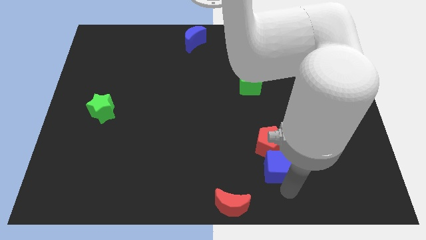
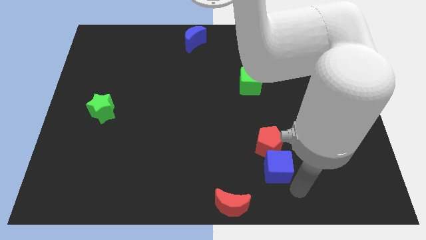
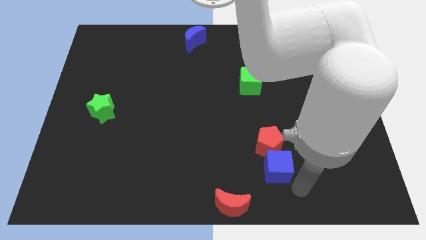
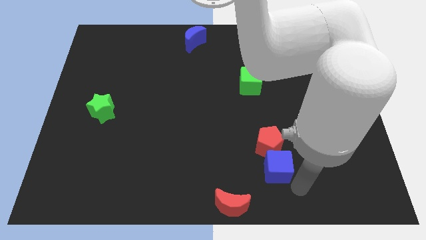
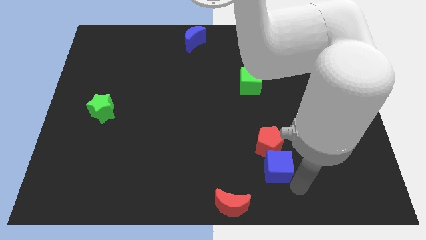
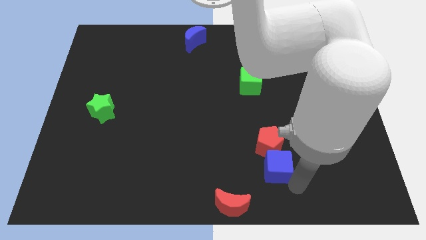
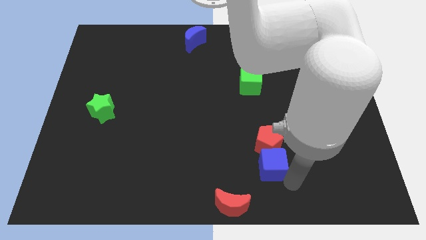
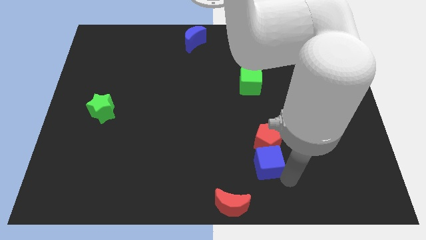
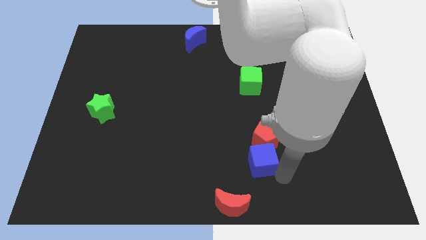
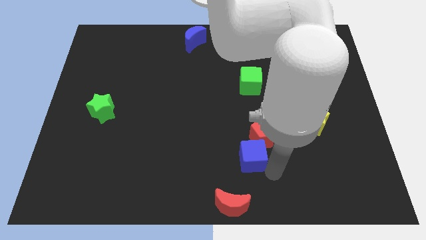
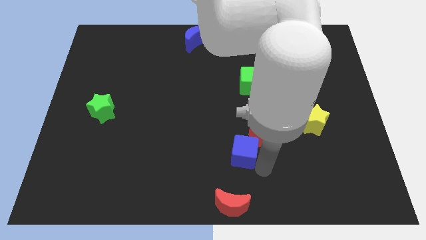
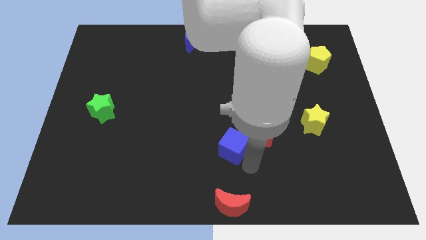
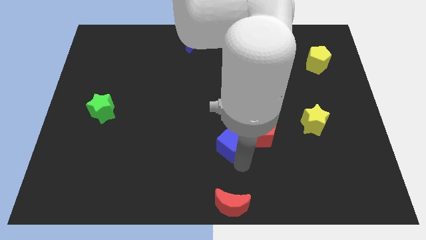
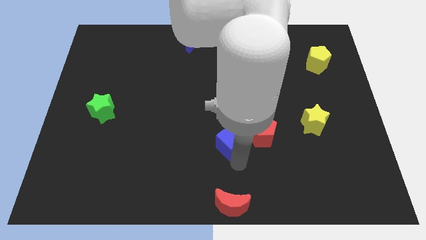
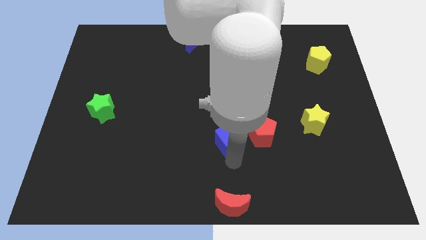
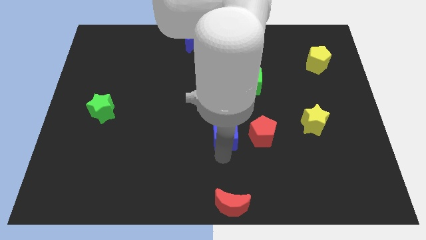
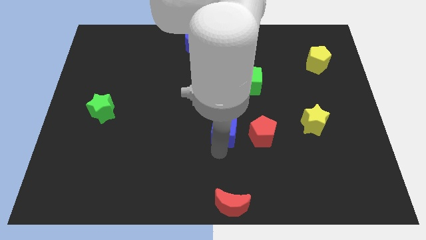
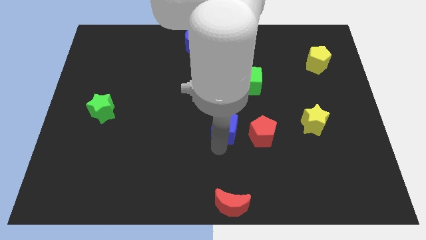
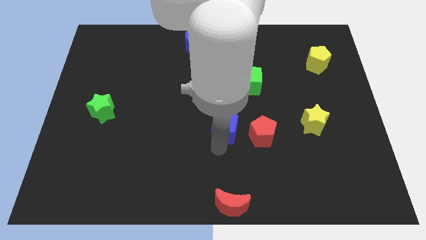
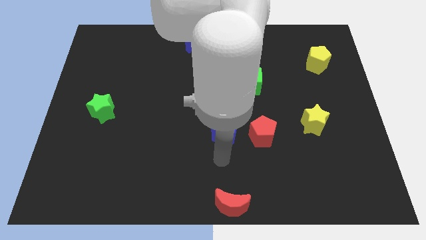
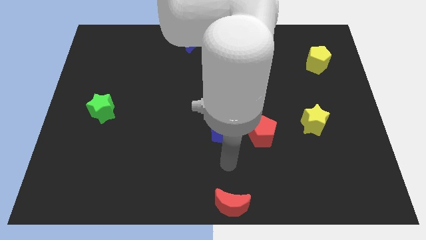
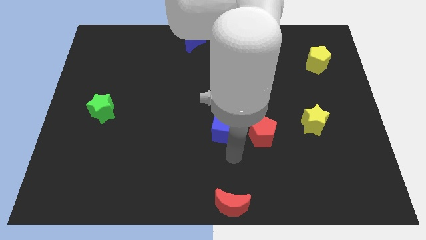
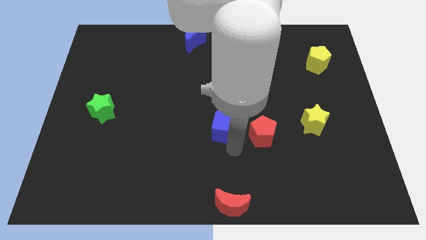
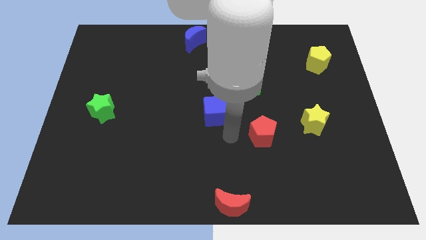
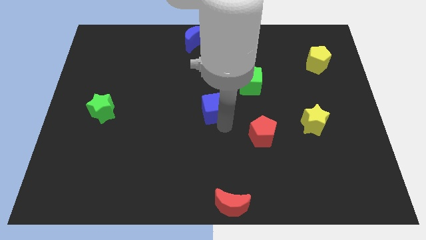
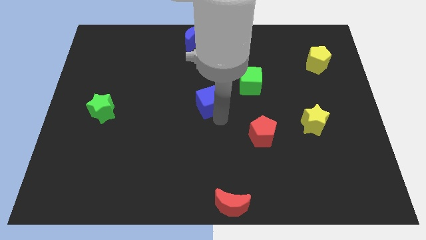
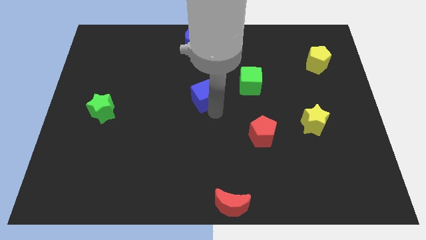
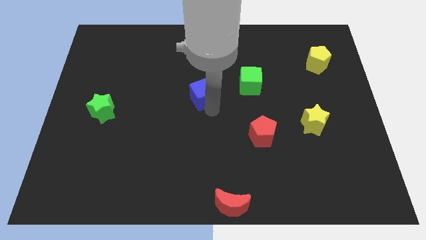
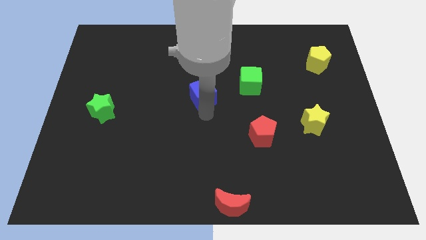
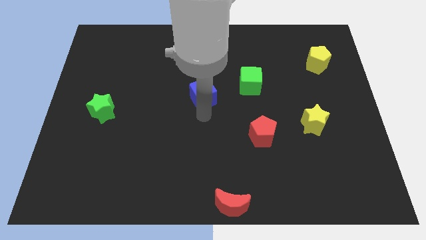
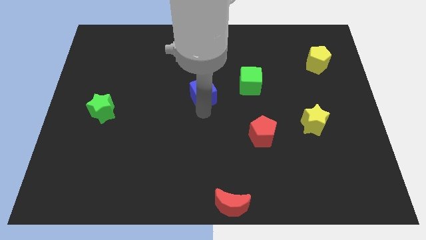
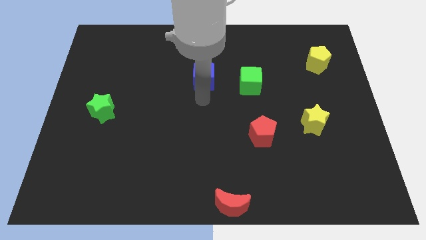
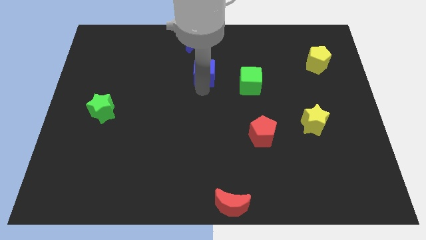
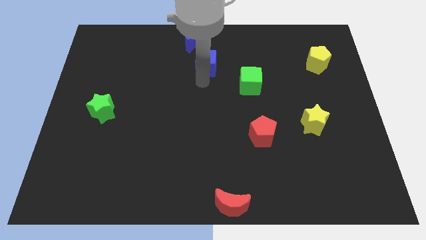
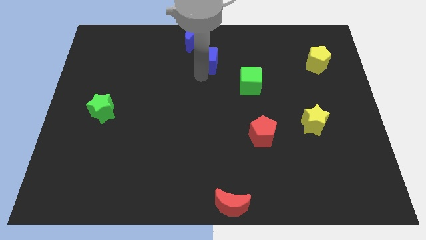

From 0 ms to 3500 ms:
push blue cube below blue crescent

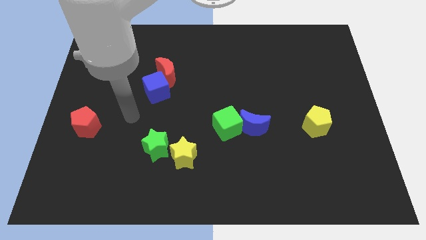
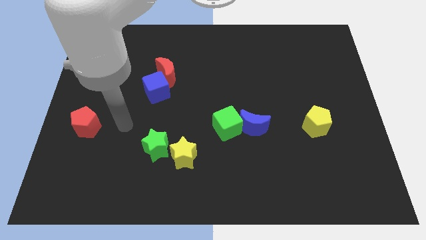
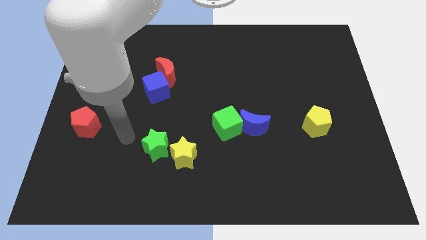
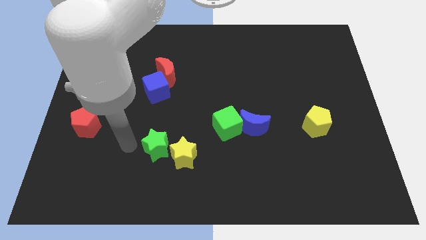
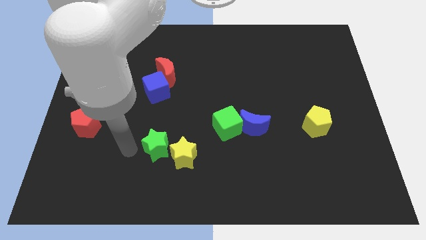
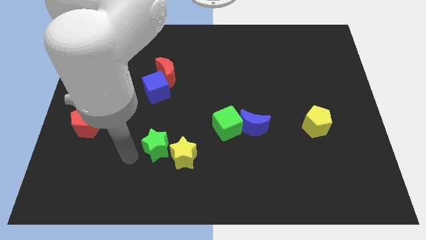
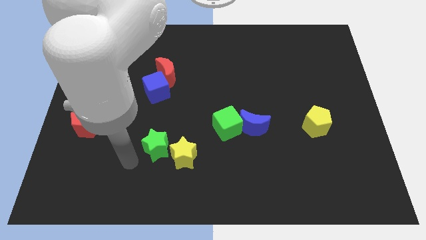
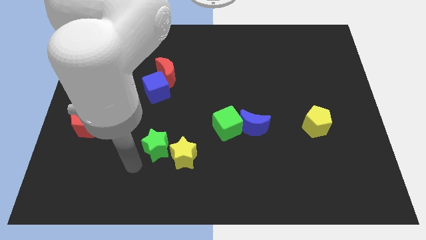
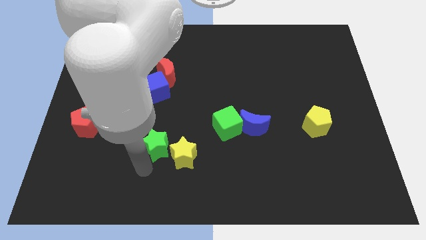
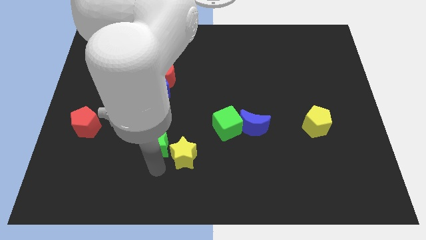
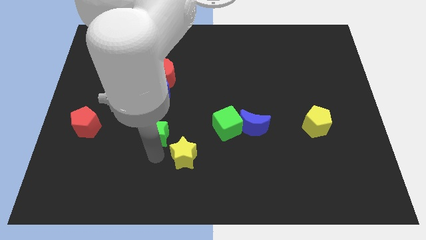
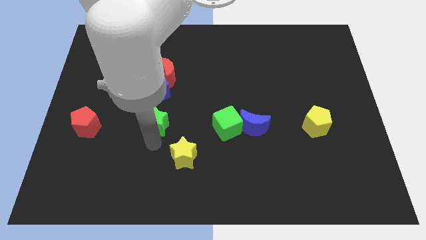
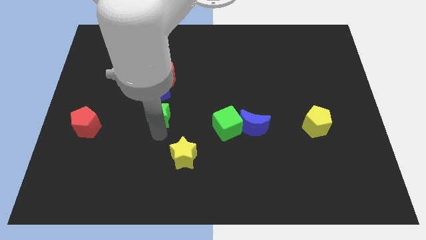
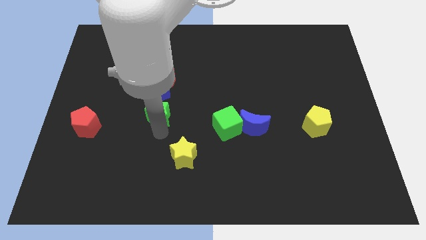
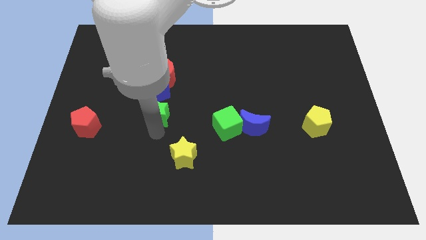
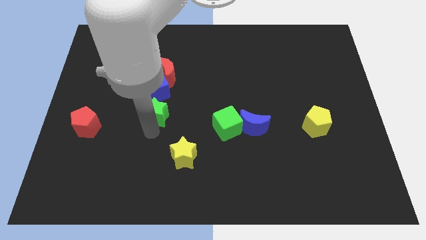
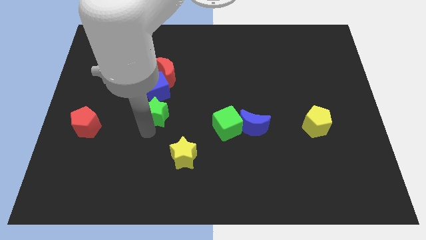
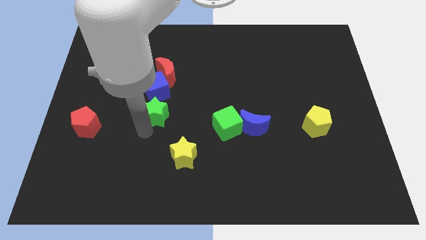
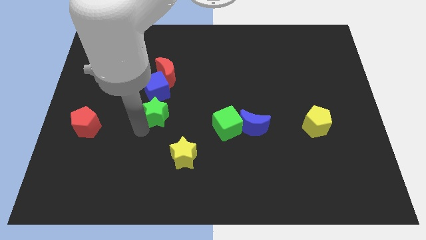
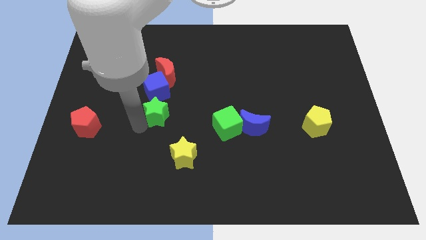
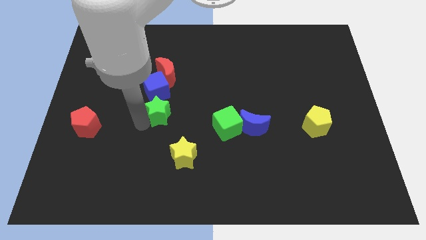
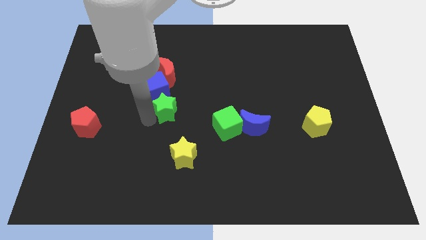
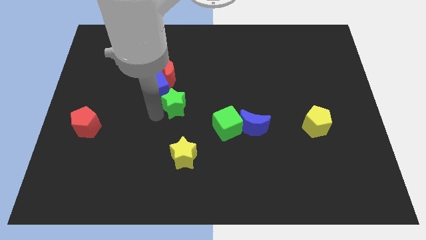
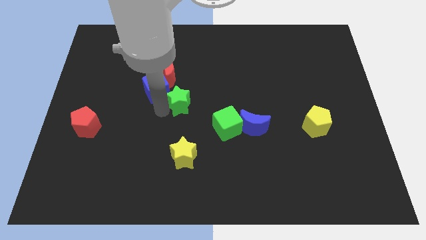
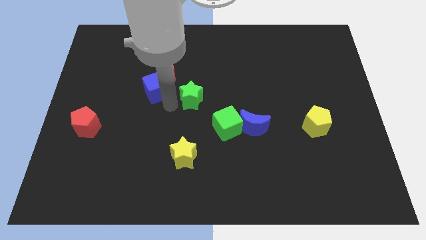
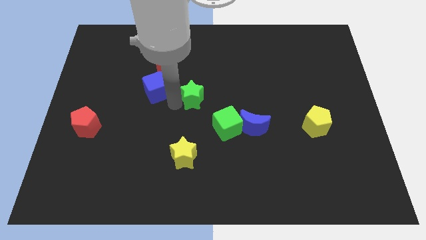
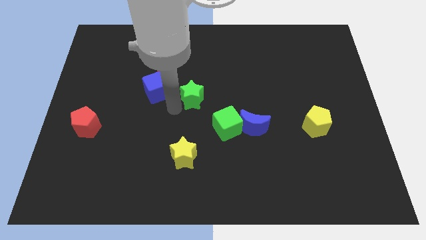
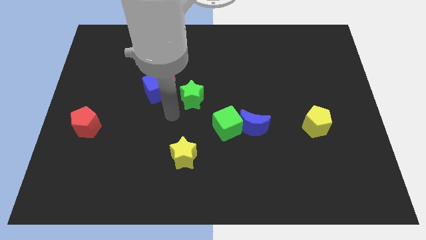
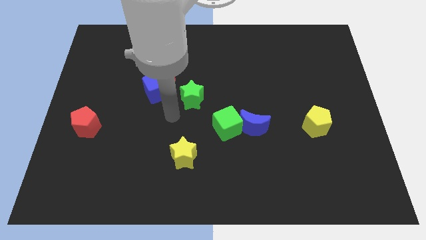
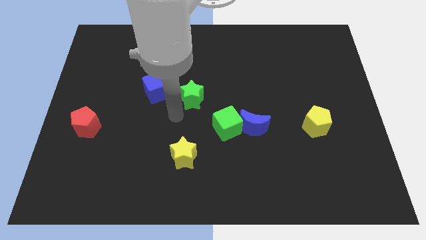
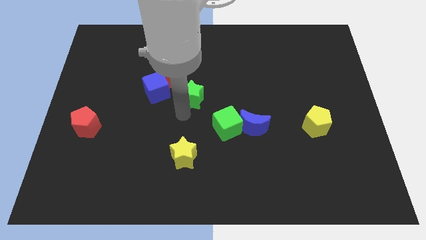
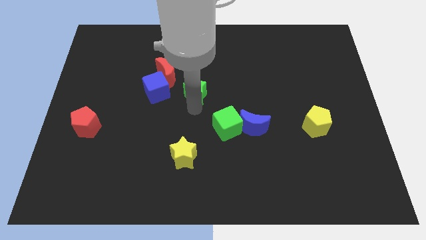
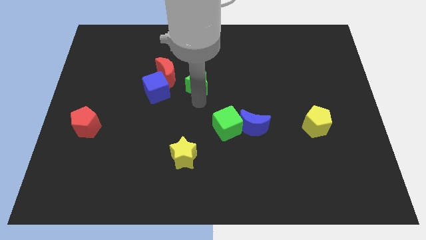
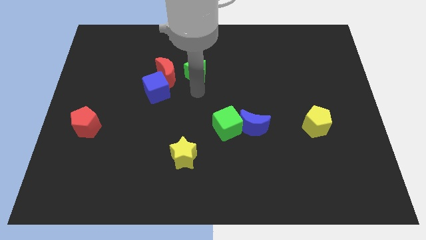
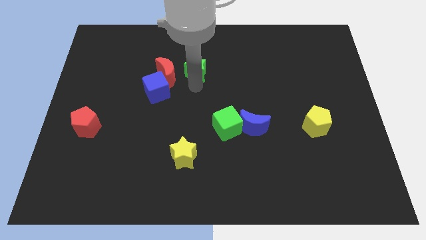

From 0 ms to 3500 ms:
move the green star to the right side of the red moon

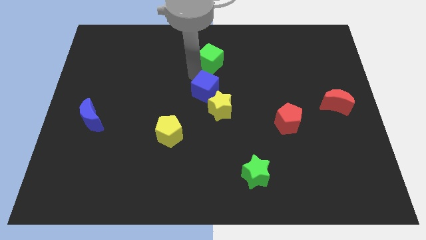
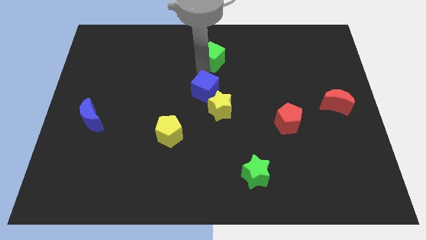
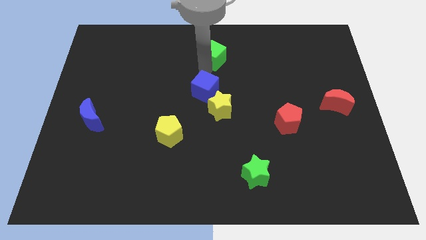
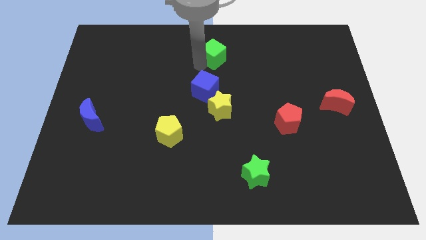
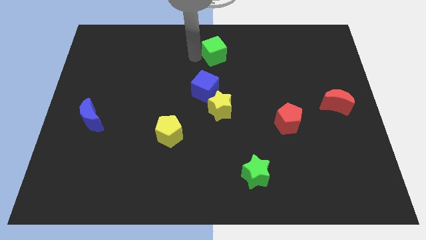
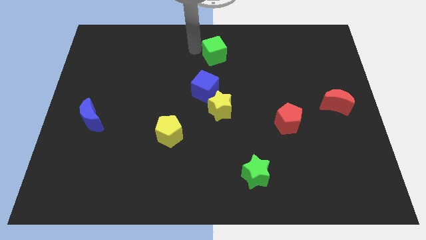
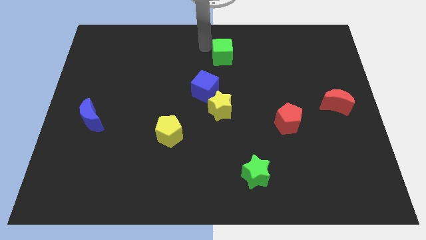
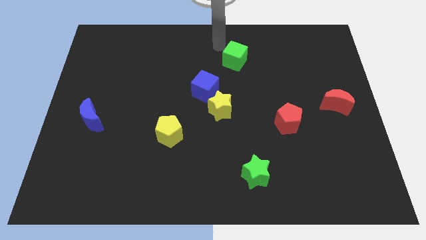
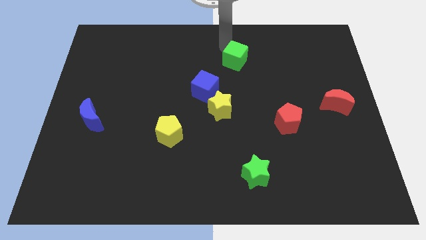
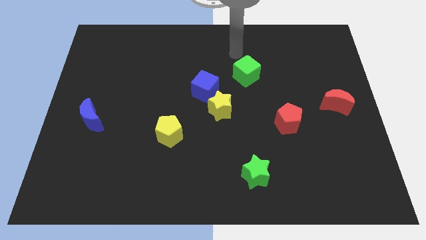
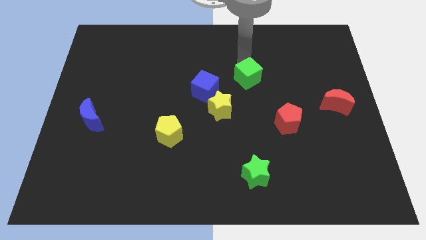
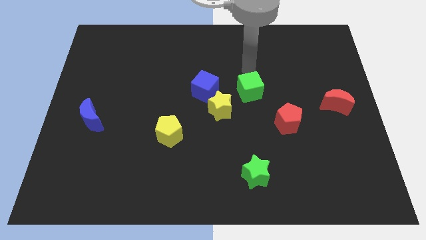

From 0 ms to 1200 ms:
place the green cube to right side of the blue cube

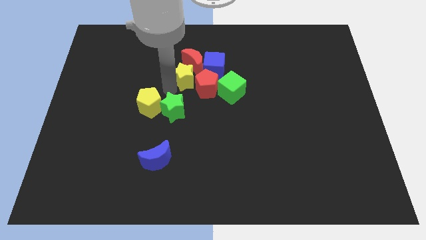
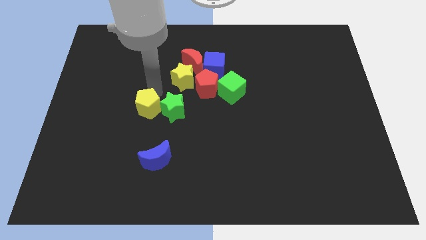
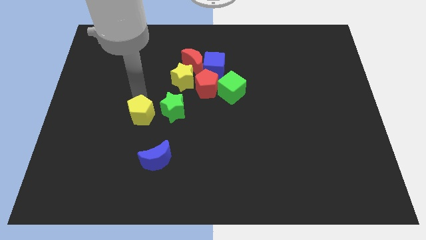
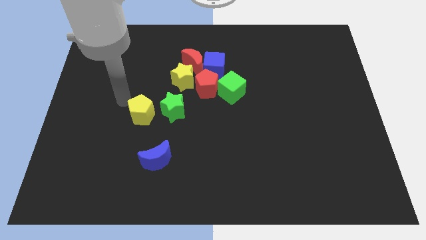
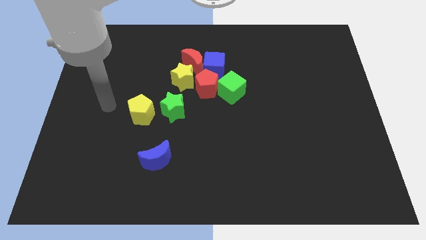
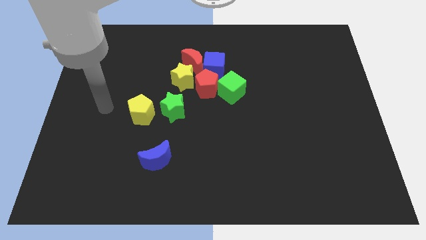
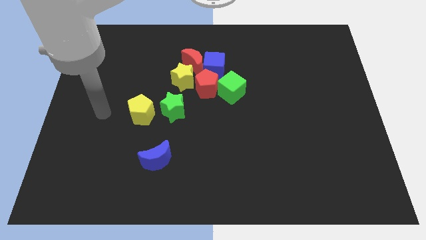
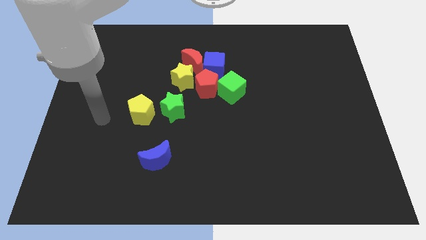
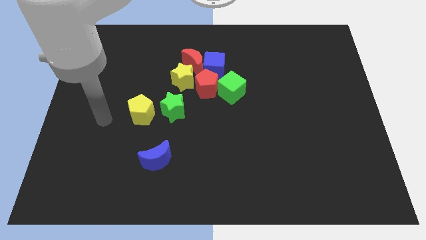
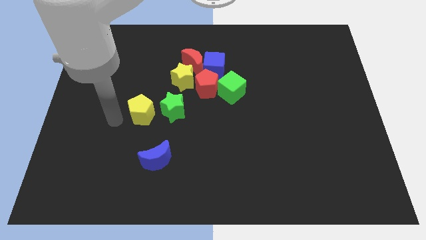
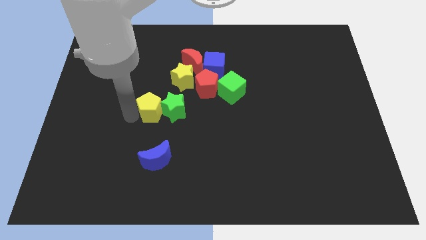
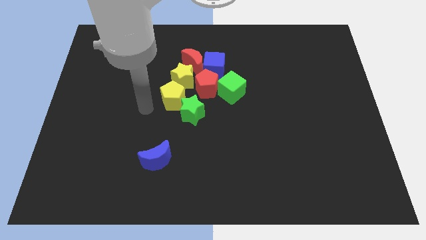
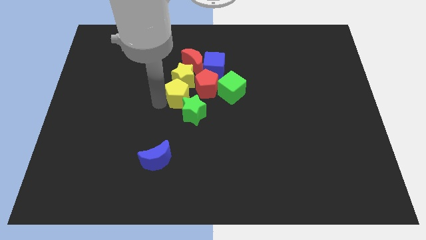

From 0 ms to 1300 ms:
slide yellow pentagon into yellow star
